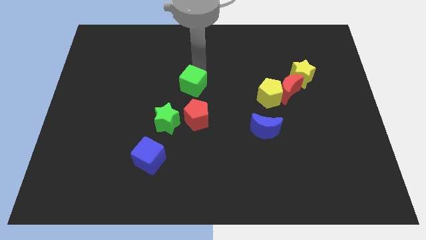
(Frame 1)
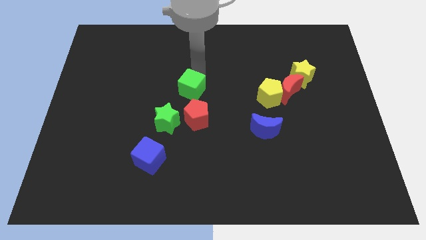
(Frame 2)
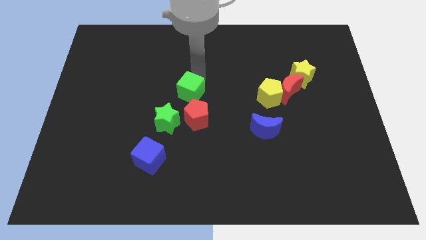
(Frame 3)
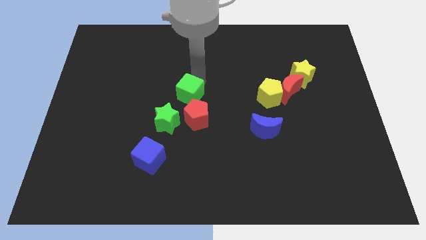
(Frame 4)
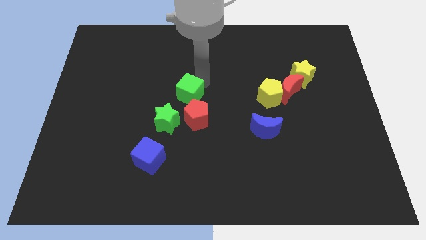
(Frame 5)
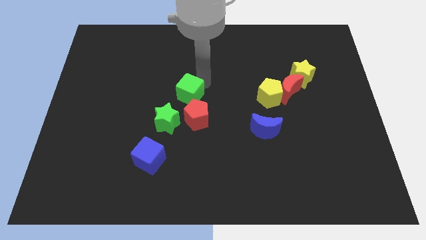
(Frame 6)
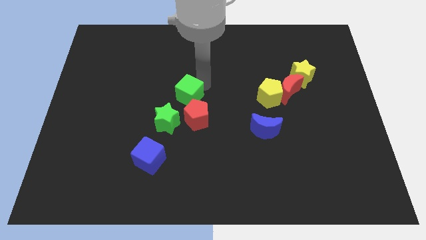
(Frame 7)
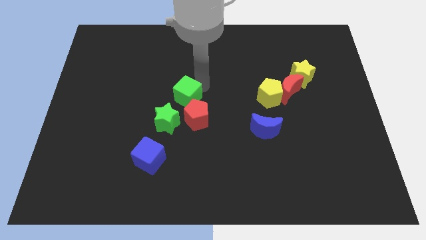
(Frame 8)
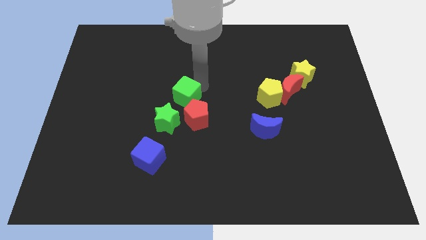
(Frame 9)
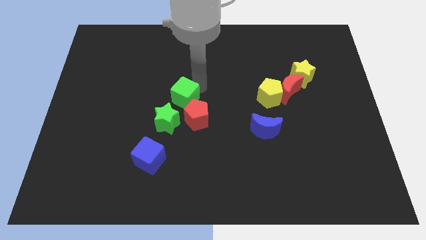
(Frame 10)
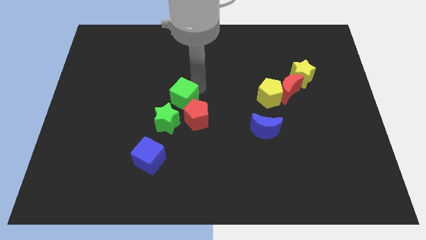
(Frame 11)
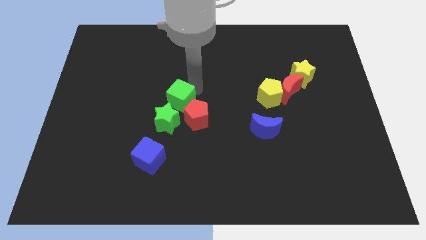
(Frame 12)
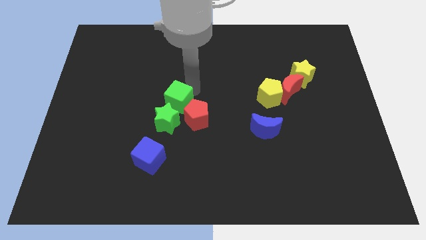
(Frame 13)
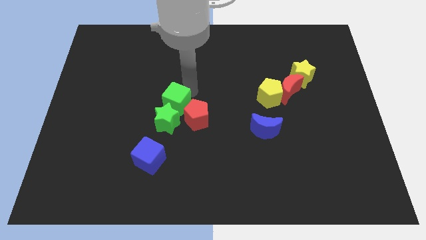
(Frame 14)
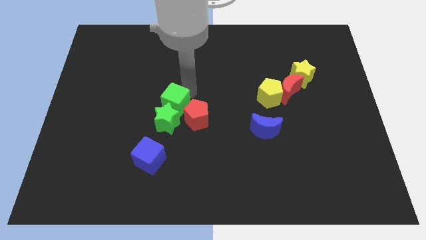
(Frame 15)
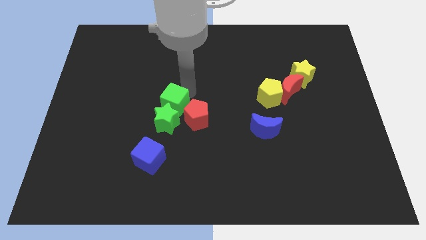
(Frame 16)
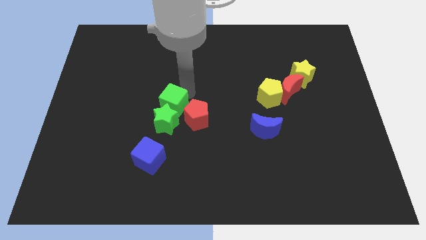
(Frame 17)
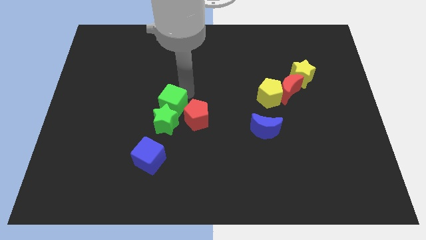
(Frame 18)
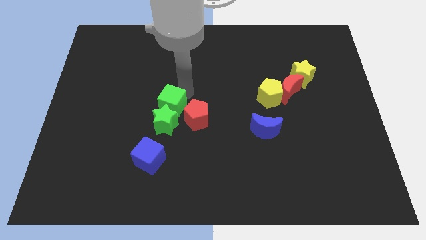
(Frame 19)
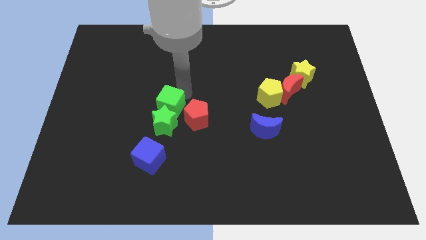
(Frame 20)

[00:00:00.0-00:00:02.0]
push green cube into the gren star

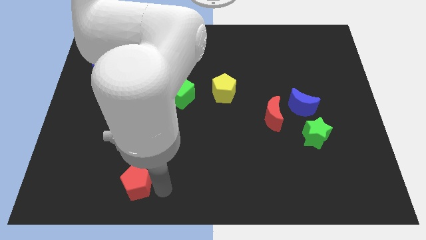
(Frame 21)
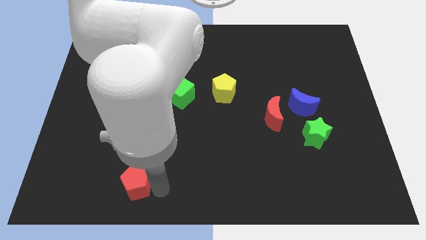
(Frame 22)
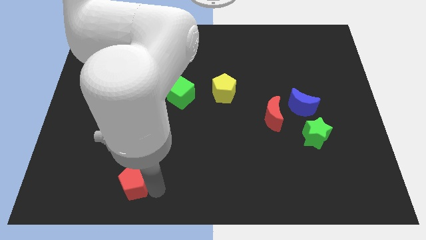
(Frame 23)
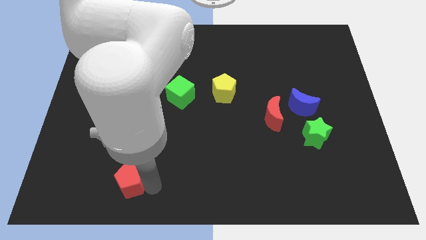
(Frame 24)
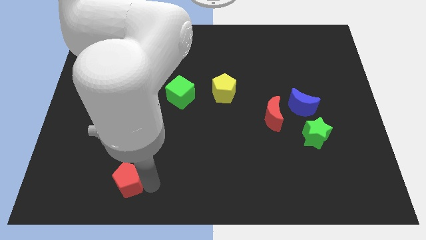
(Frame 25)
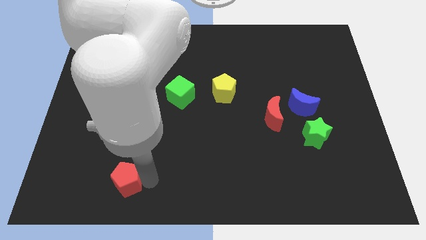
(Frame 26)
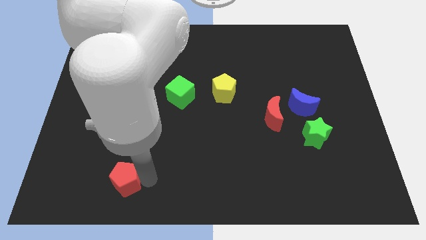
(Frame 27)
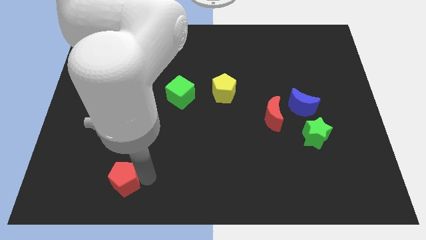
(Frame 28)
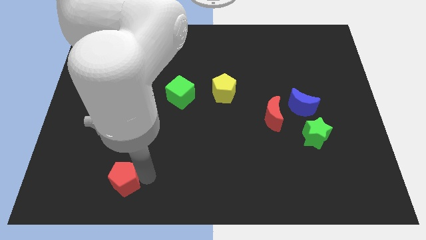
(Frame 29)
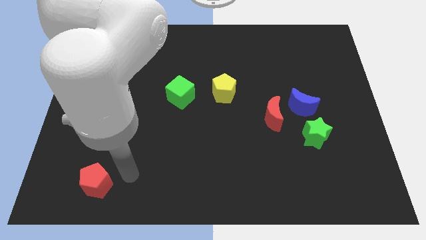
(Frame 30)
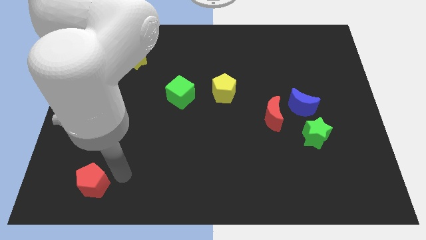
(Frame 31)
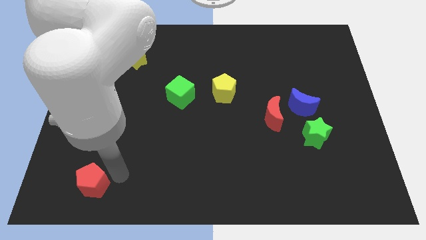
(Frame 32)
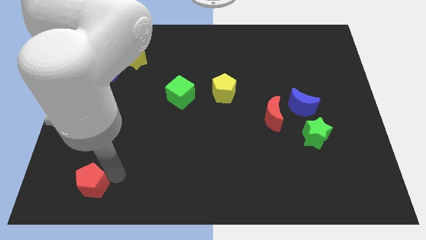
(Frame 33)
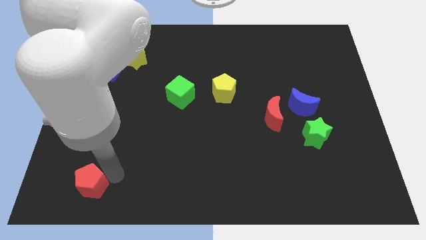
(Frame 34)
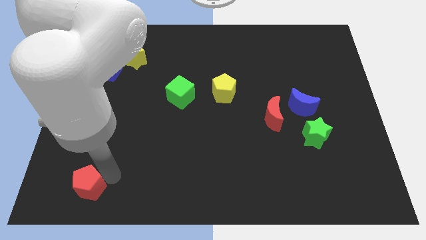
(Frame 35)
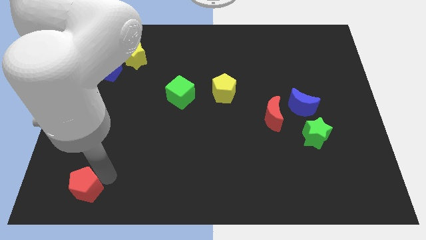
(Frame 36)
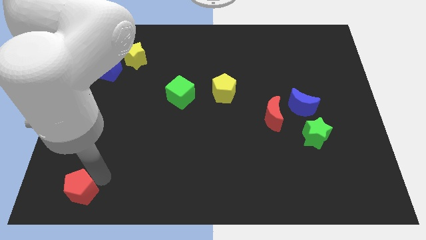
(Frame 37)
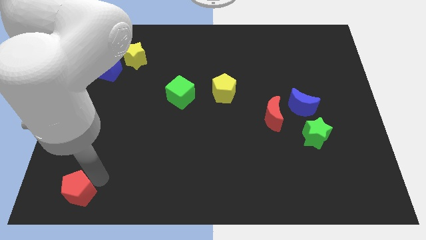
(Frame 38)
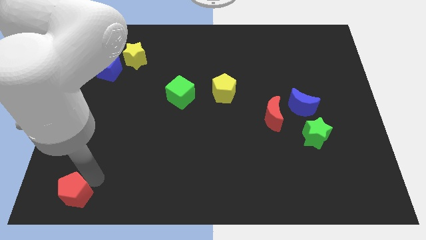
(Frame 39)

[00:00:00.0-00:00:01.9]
place the red pentagon vertically at the bottom side of the blue cube

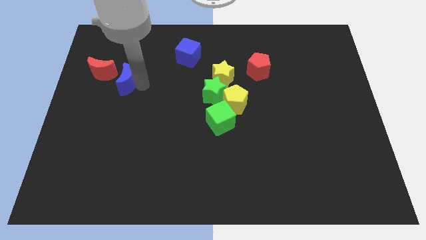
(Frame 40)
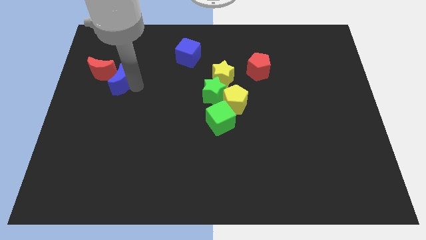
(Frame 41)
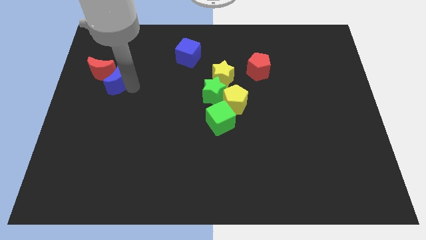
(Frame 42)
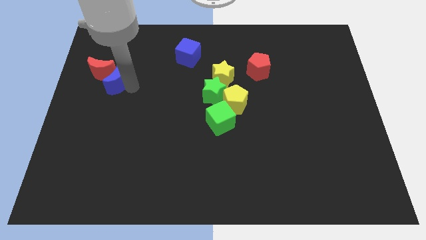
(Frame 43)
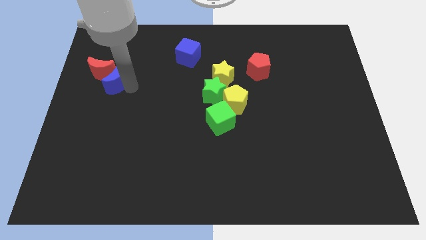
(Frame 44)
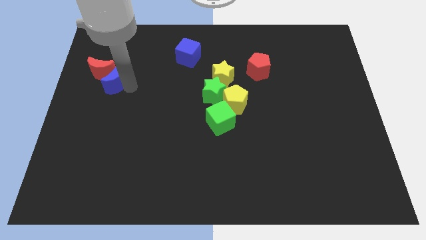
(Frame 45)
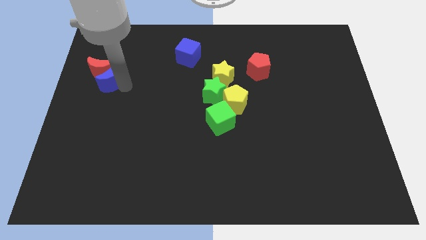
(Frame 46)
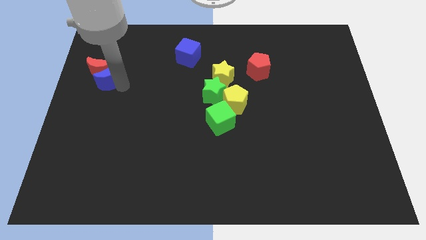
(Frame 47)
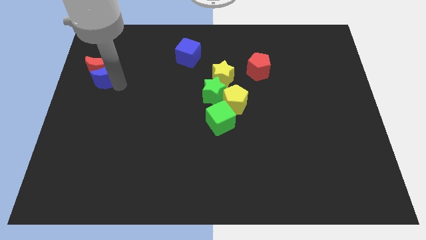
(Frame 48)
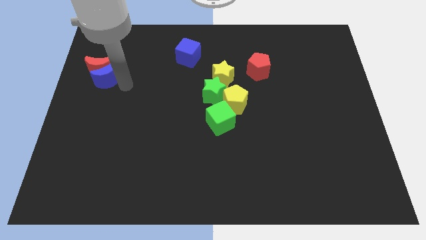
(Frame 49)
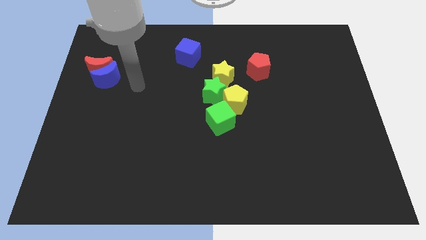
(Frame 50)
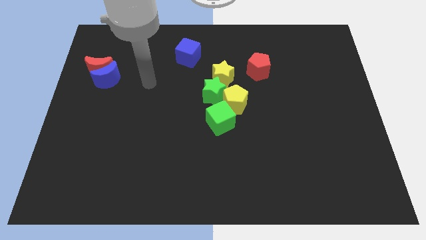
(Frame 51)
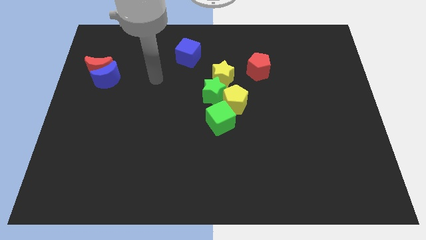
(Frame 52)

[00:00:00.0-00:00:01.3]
move the blue moon to the bottom right side of the red moon

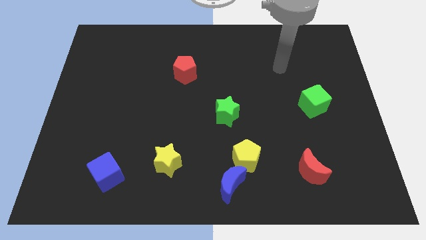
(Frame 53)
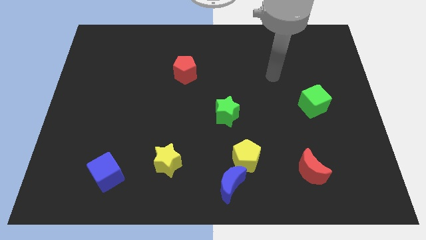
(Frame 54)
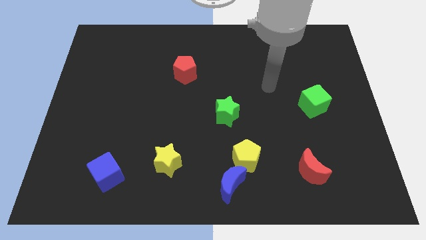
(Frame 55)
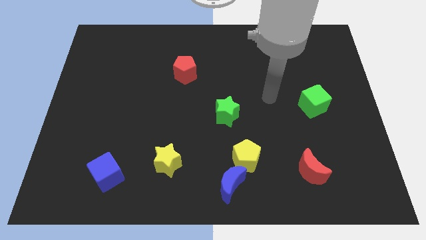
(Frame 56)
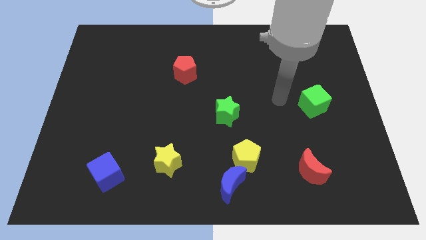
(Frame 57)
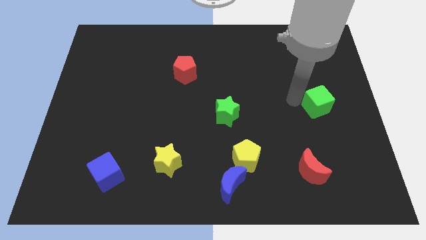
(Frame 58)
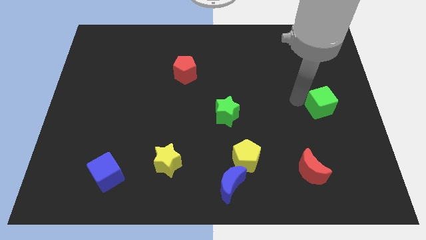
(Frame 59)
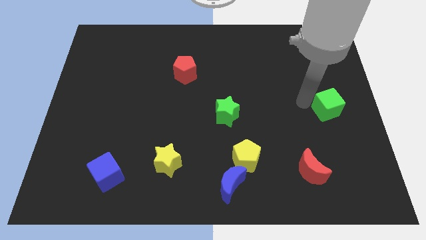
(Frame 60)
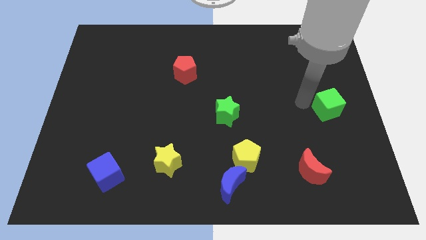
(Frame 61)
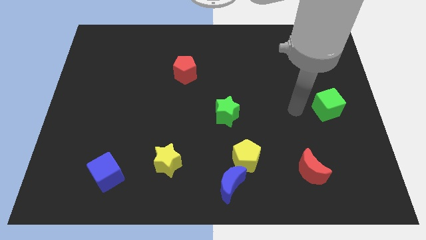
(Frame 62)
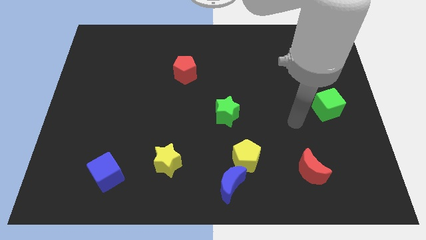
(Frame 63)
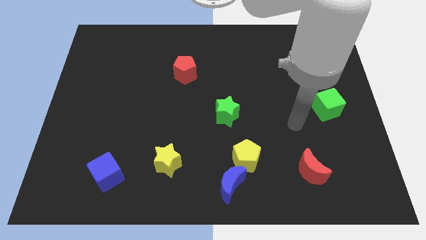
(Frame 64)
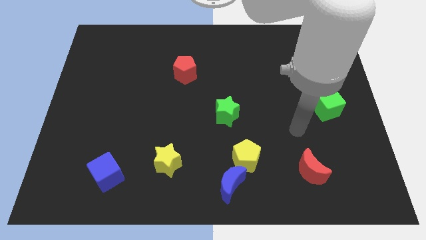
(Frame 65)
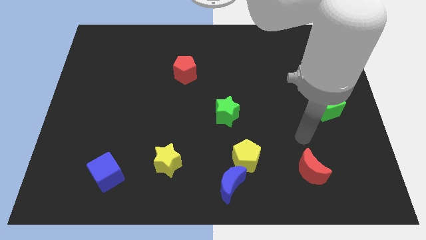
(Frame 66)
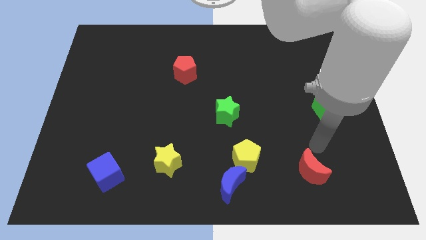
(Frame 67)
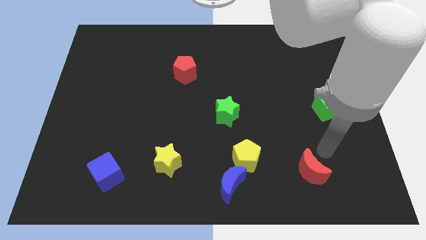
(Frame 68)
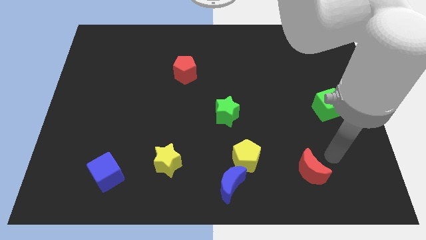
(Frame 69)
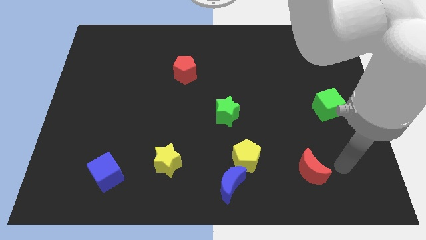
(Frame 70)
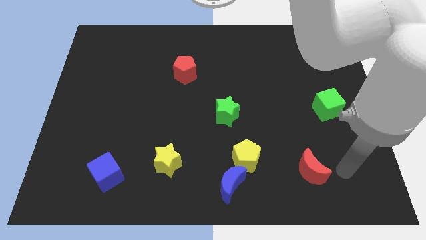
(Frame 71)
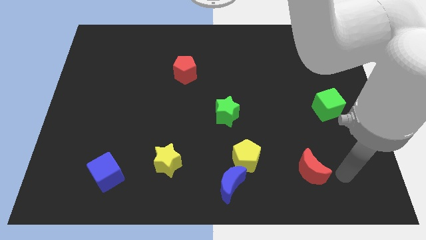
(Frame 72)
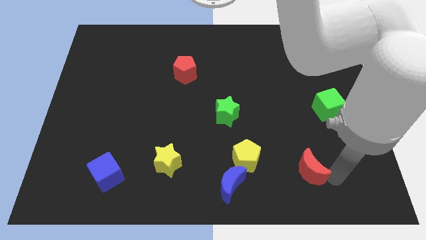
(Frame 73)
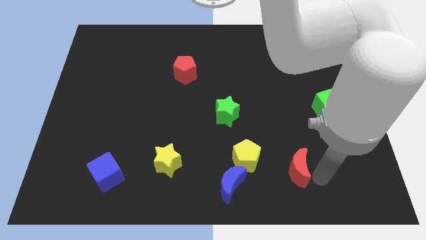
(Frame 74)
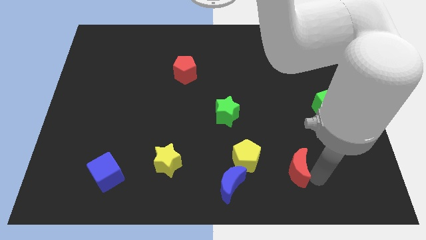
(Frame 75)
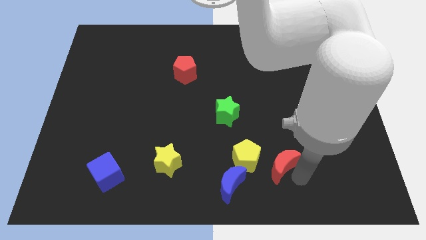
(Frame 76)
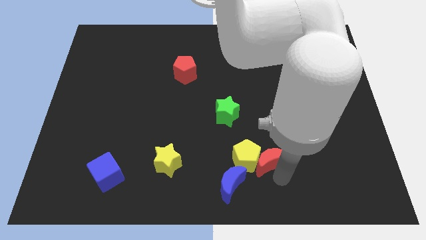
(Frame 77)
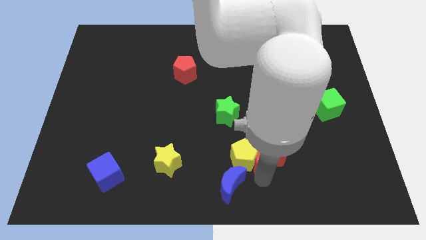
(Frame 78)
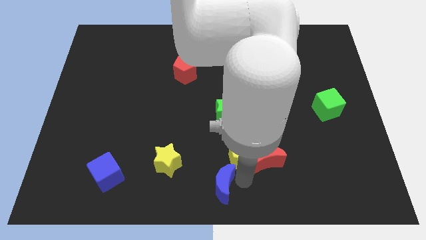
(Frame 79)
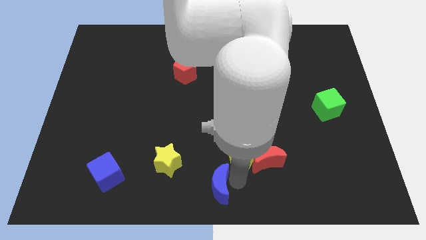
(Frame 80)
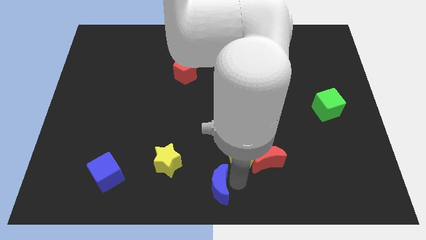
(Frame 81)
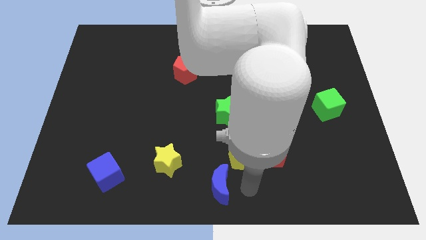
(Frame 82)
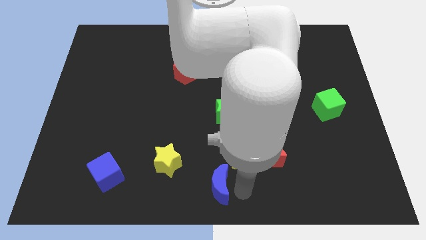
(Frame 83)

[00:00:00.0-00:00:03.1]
move the red crescent into yellow pentagon

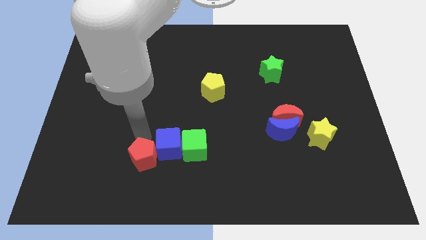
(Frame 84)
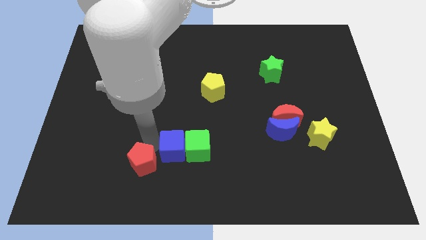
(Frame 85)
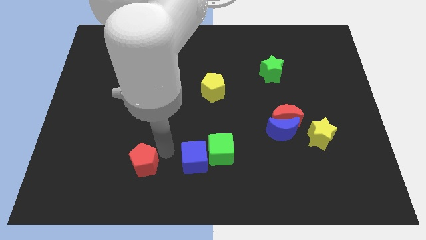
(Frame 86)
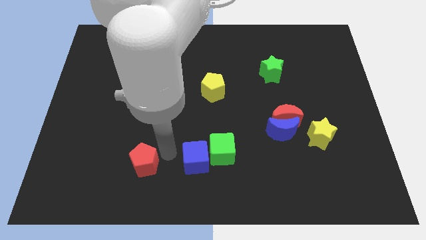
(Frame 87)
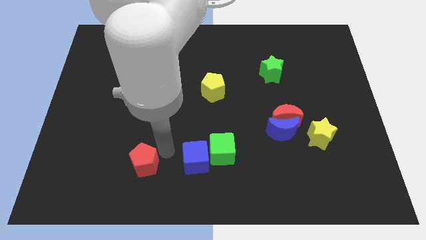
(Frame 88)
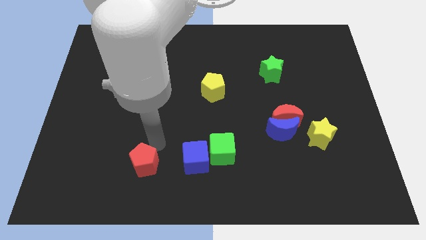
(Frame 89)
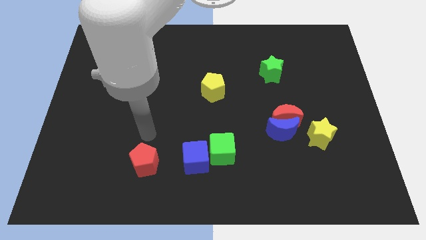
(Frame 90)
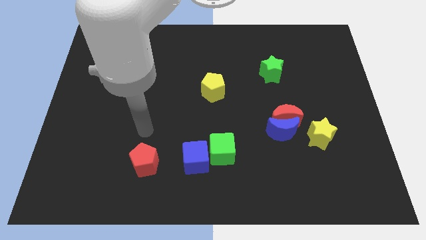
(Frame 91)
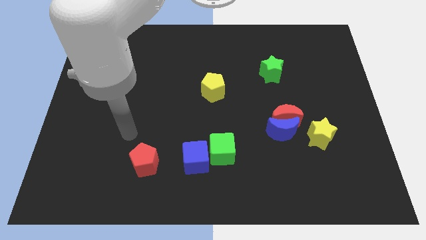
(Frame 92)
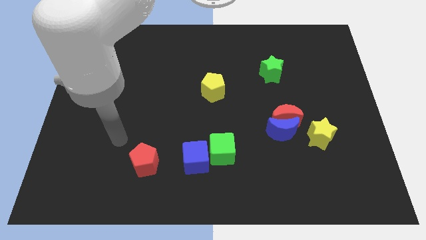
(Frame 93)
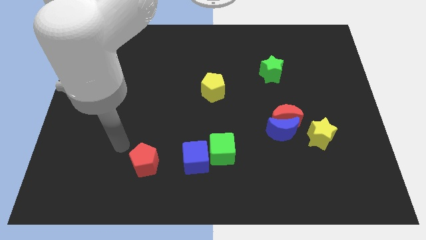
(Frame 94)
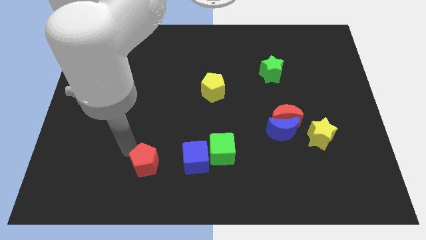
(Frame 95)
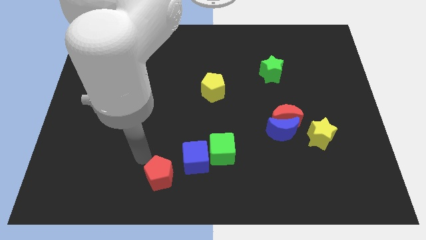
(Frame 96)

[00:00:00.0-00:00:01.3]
separate the red pentagon and the cubes
